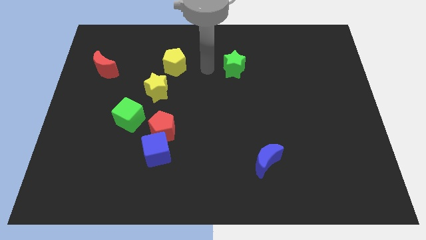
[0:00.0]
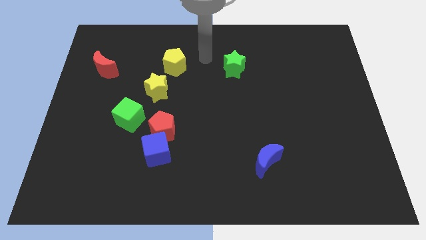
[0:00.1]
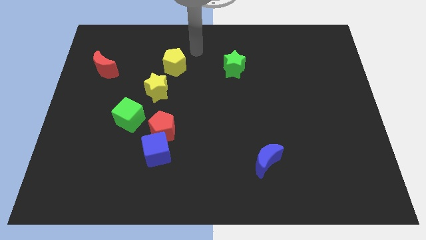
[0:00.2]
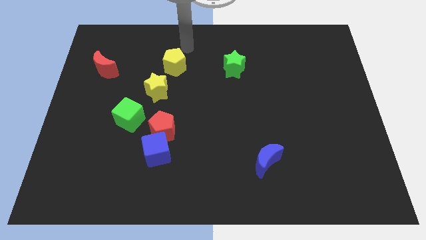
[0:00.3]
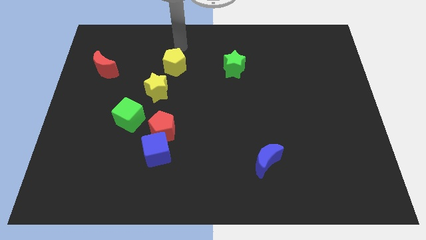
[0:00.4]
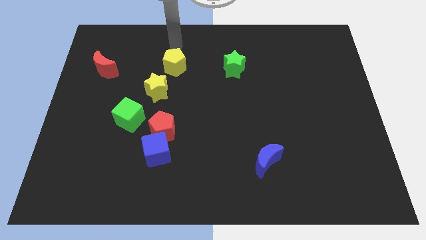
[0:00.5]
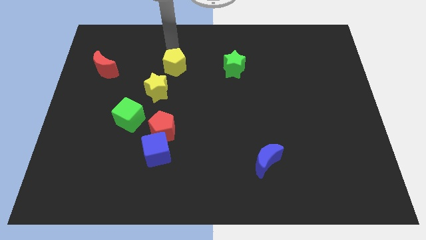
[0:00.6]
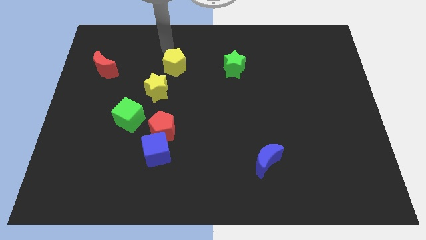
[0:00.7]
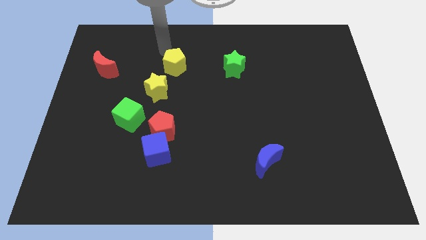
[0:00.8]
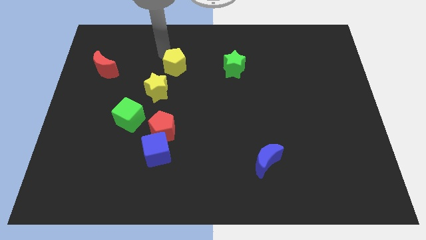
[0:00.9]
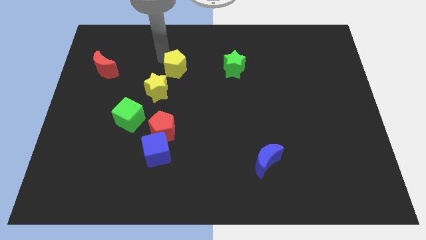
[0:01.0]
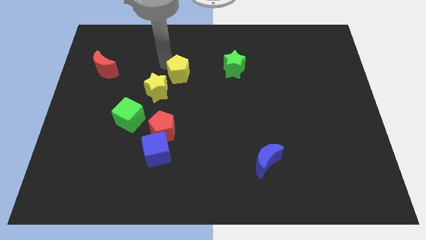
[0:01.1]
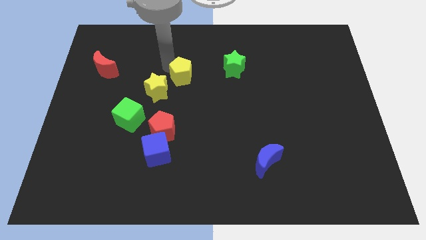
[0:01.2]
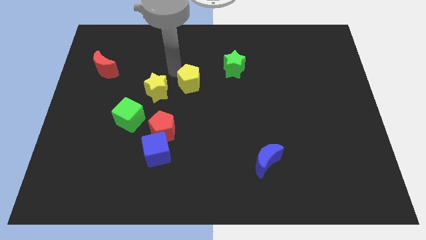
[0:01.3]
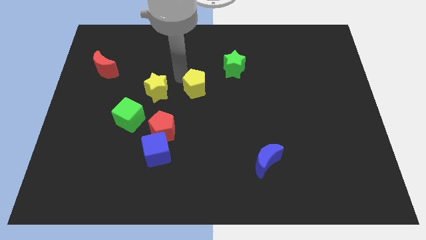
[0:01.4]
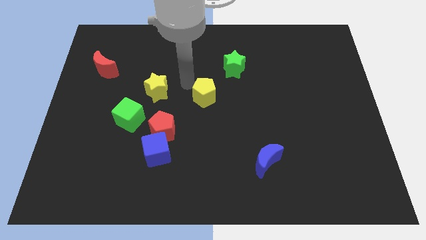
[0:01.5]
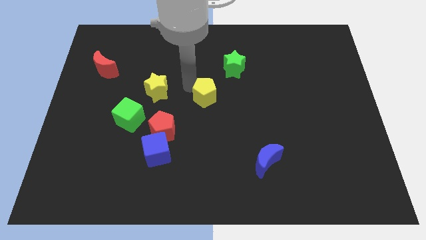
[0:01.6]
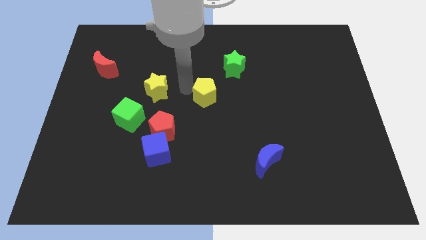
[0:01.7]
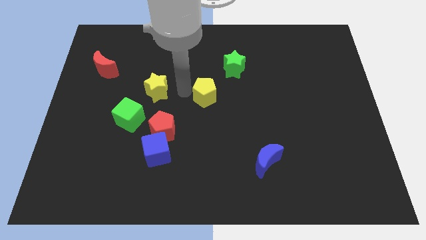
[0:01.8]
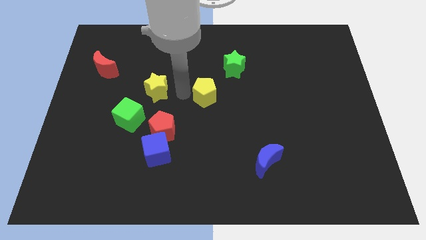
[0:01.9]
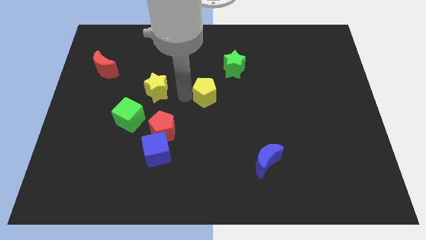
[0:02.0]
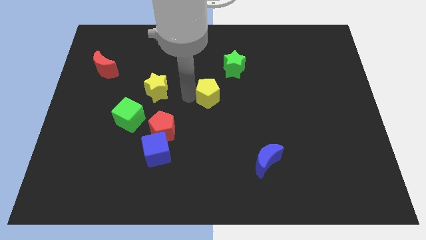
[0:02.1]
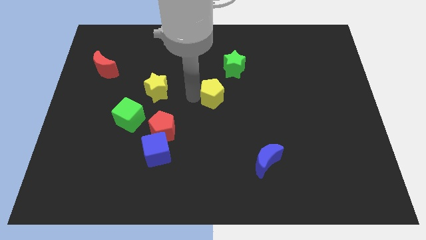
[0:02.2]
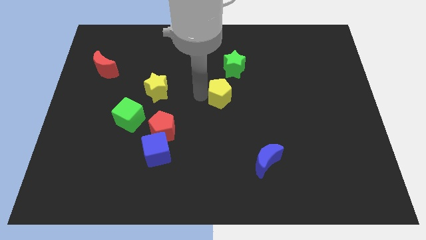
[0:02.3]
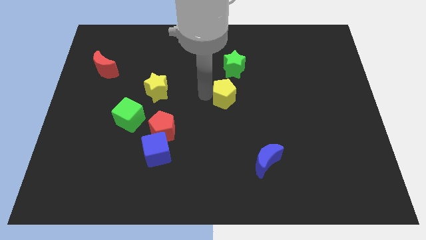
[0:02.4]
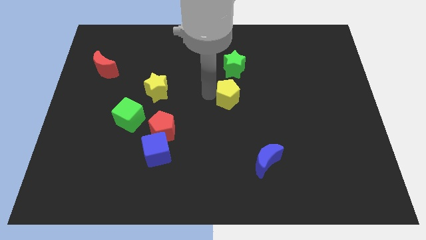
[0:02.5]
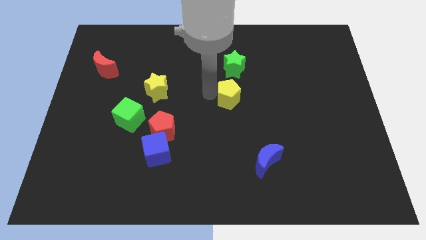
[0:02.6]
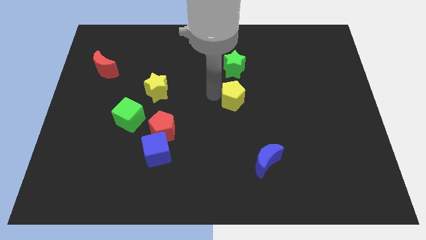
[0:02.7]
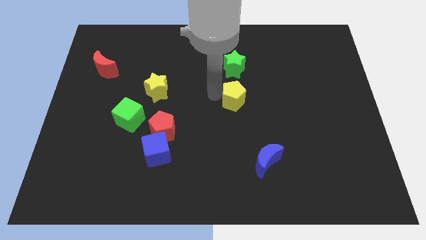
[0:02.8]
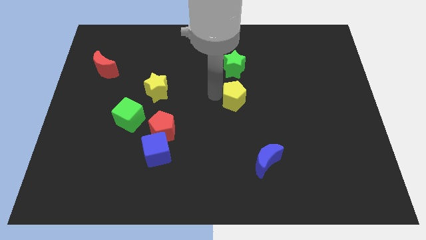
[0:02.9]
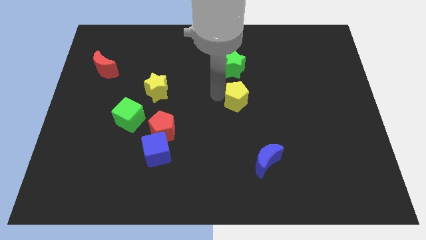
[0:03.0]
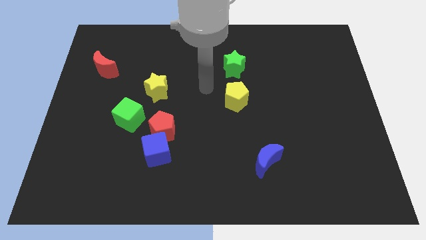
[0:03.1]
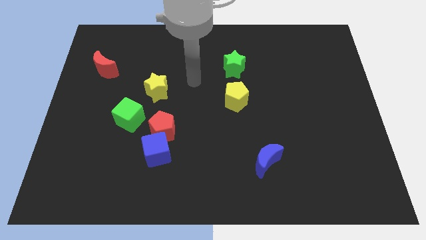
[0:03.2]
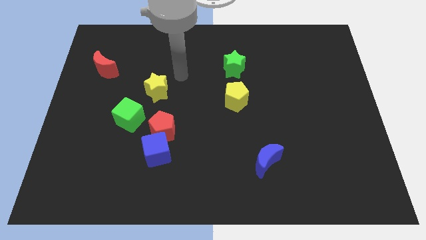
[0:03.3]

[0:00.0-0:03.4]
move the yellow pentagon to the bottom of the green star

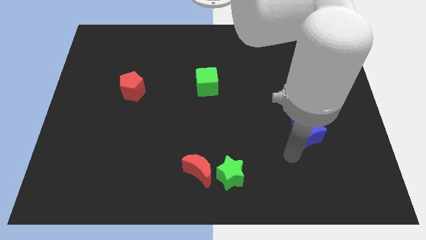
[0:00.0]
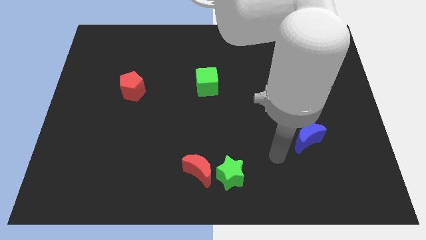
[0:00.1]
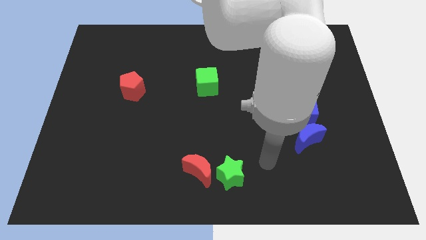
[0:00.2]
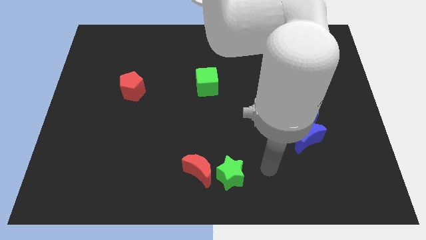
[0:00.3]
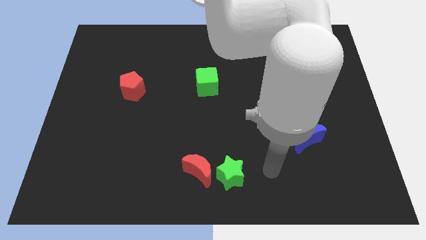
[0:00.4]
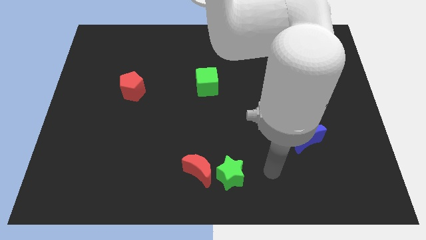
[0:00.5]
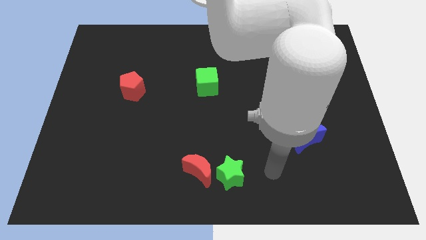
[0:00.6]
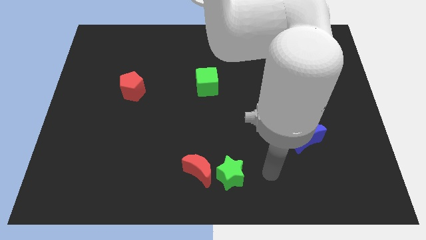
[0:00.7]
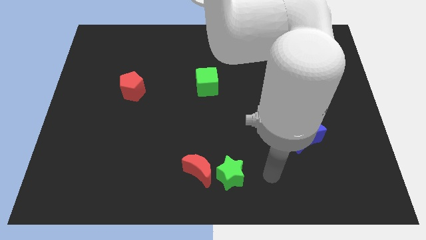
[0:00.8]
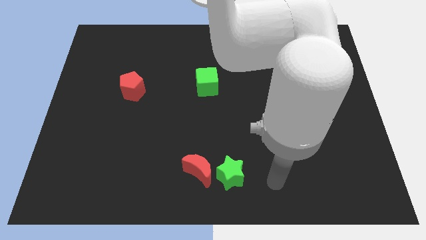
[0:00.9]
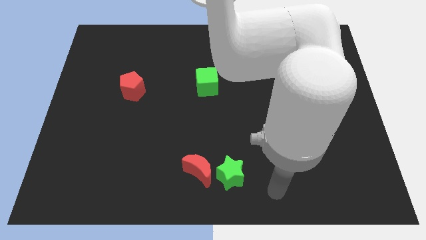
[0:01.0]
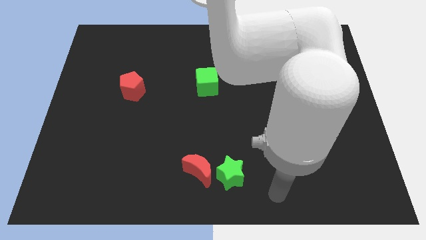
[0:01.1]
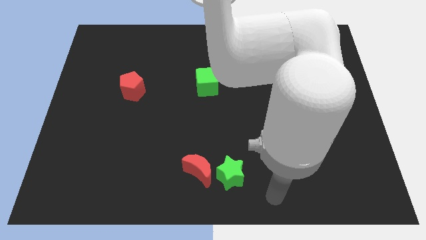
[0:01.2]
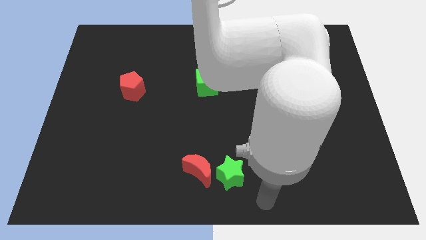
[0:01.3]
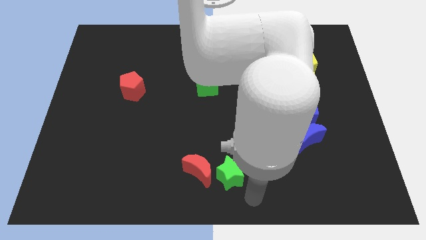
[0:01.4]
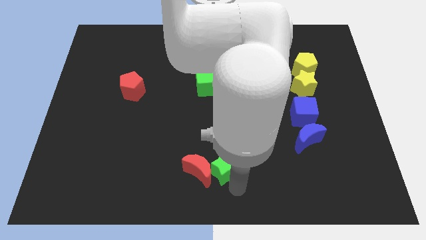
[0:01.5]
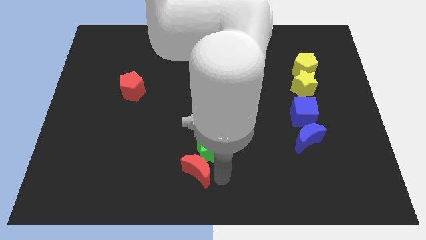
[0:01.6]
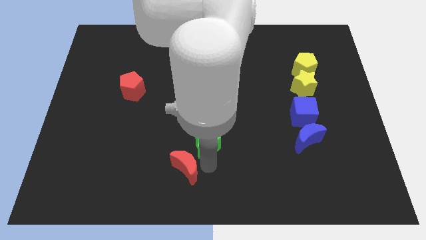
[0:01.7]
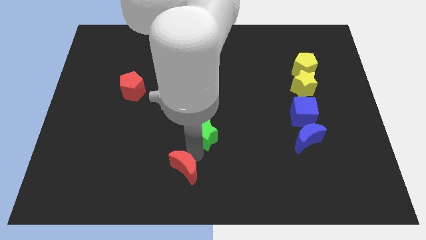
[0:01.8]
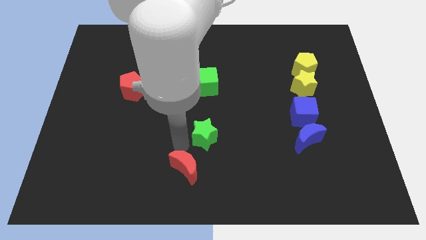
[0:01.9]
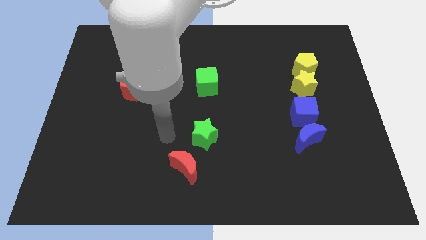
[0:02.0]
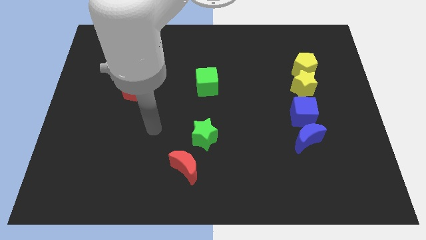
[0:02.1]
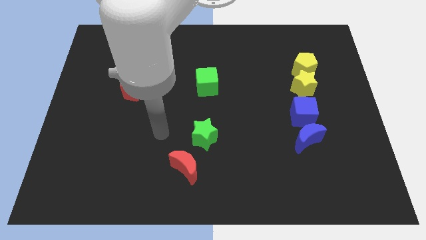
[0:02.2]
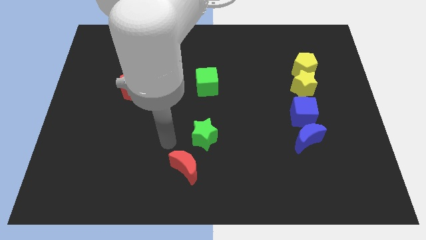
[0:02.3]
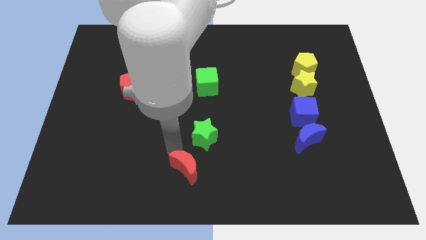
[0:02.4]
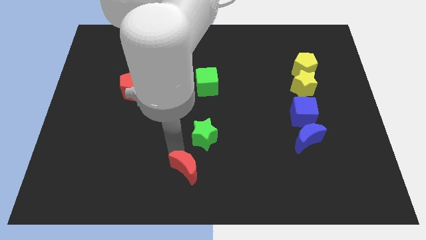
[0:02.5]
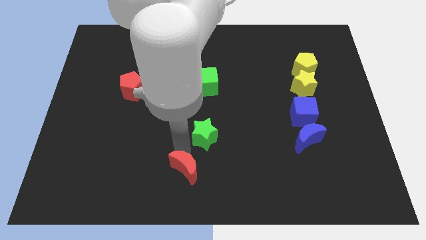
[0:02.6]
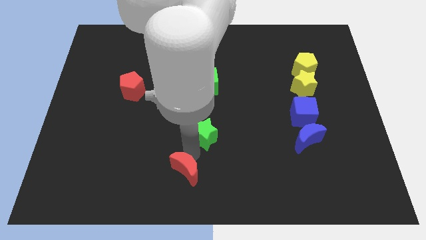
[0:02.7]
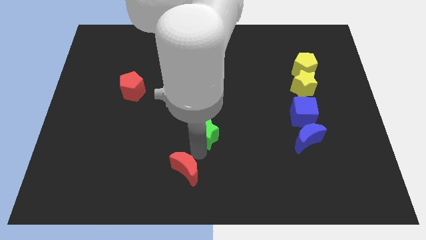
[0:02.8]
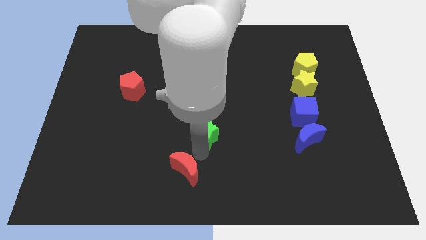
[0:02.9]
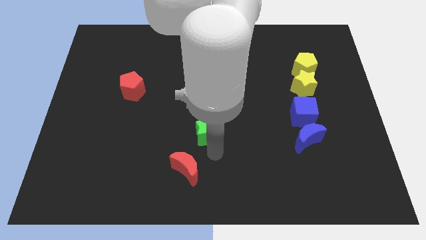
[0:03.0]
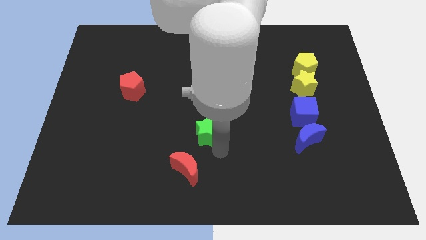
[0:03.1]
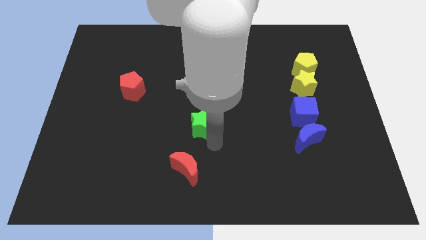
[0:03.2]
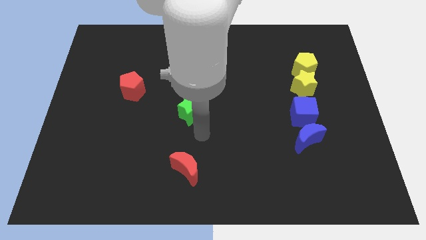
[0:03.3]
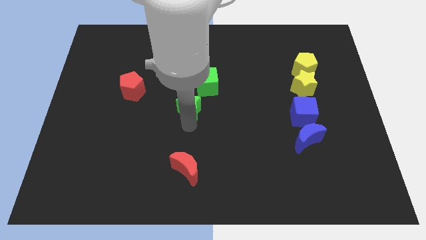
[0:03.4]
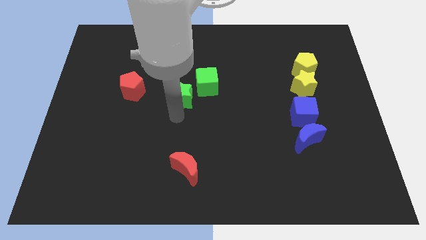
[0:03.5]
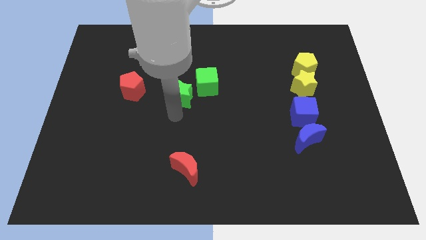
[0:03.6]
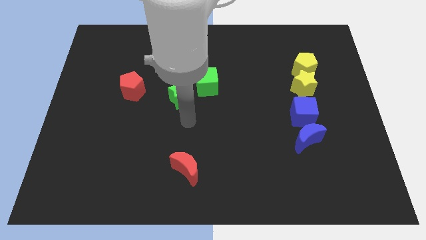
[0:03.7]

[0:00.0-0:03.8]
move the green star beside to the green cube

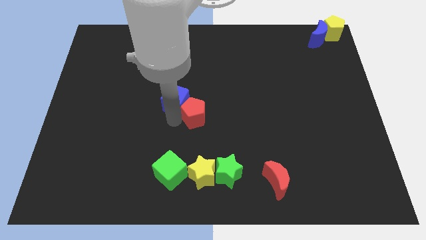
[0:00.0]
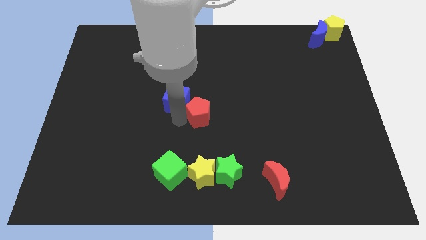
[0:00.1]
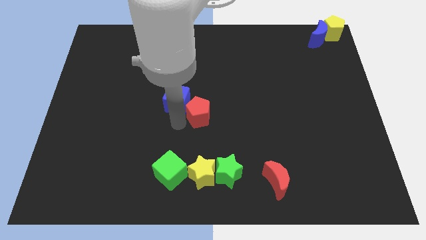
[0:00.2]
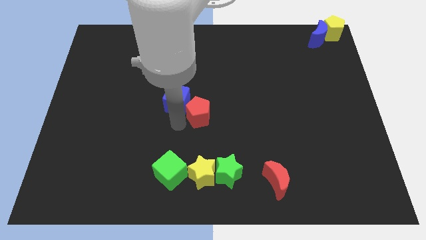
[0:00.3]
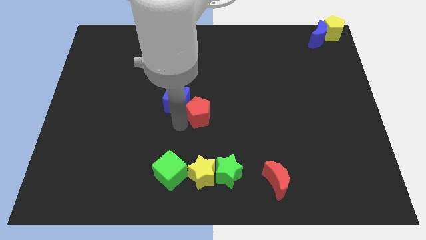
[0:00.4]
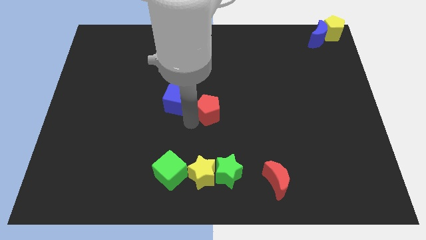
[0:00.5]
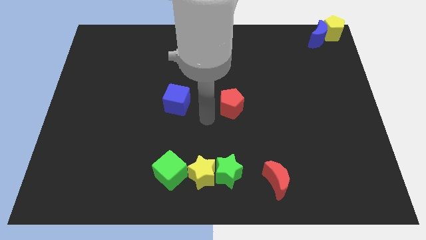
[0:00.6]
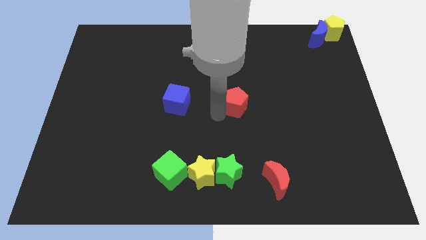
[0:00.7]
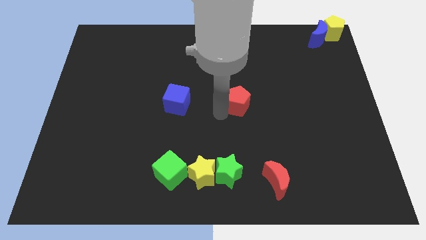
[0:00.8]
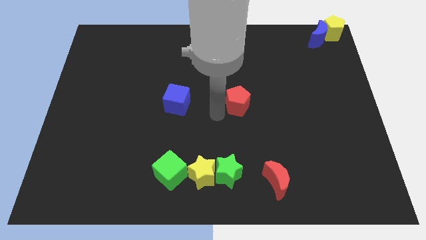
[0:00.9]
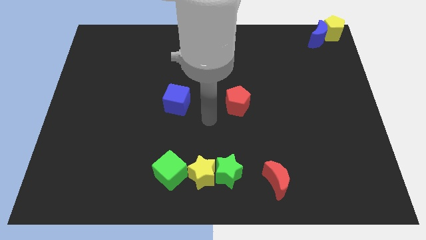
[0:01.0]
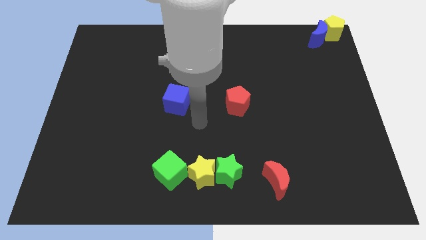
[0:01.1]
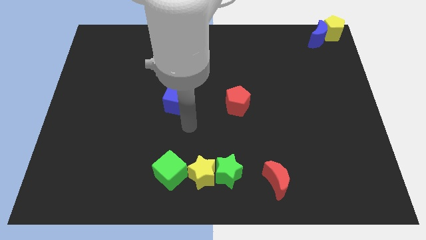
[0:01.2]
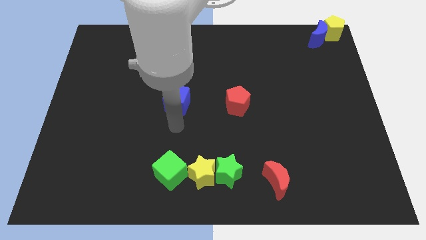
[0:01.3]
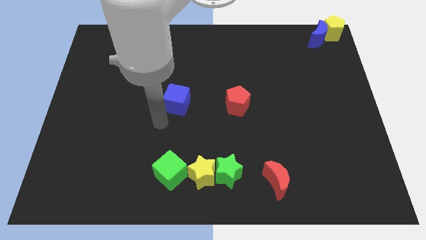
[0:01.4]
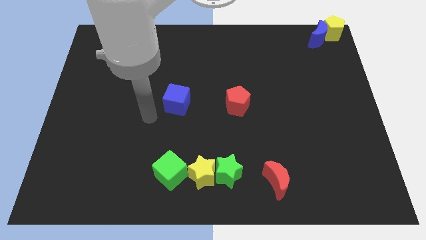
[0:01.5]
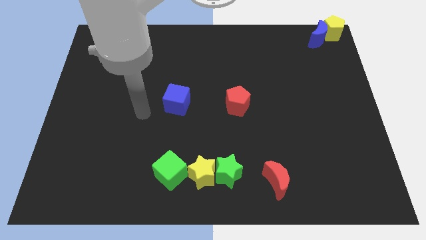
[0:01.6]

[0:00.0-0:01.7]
slide the red pentagon towards the center of the board
